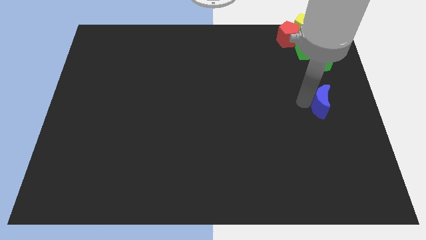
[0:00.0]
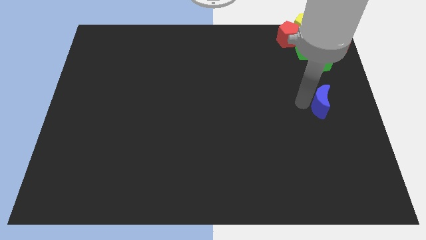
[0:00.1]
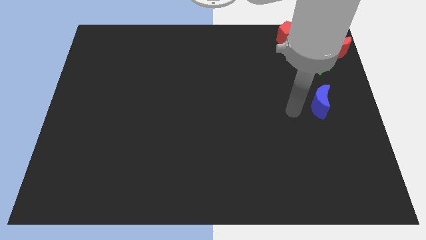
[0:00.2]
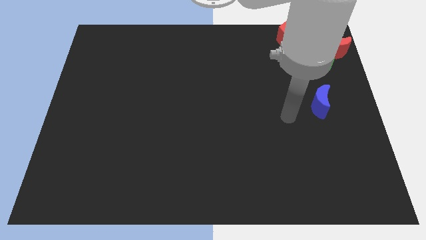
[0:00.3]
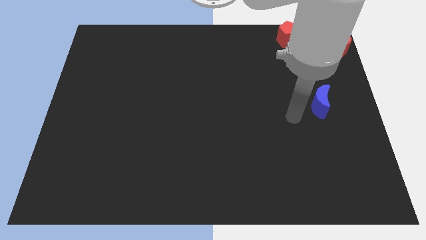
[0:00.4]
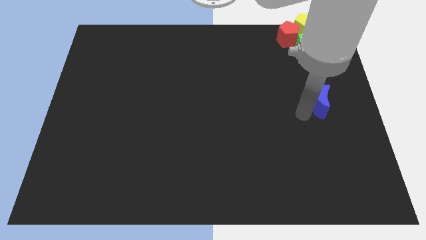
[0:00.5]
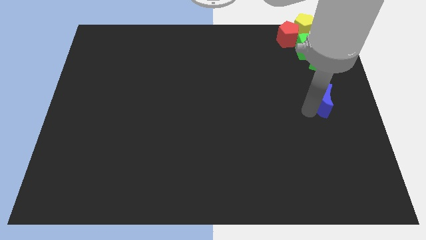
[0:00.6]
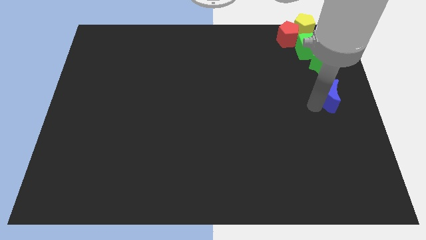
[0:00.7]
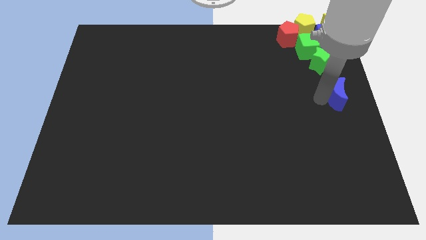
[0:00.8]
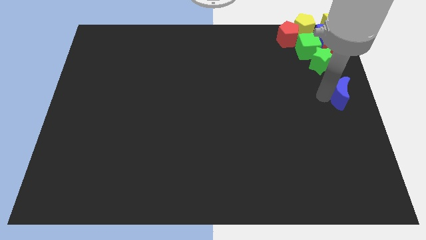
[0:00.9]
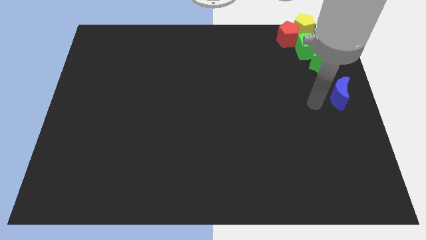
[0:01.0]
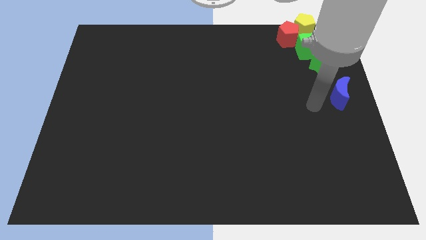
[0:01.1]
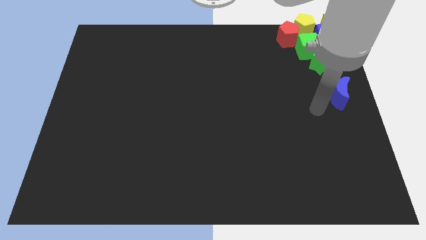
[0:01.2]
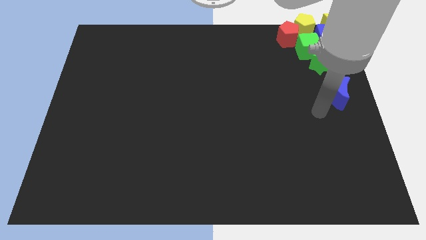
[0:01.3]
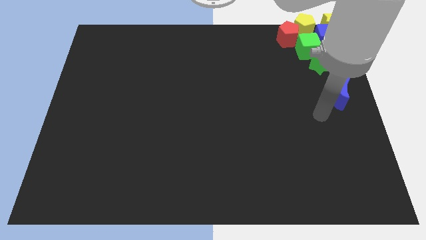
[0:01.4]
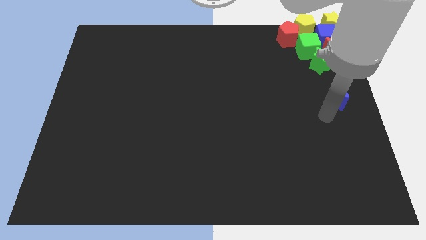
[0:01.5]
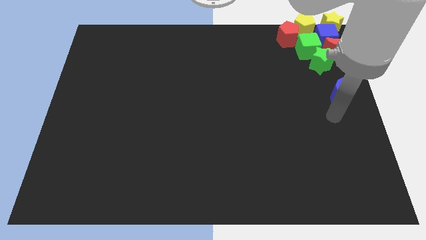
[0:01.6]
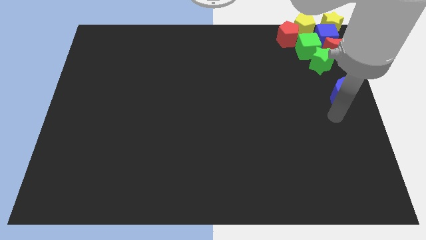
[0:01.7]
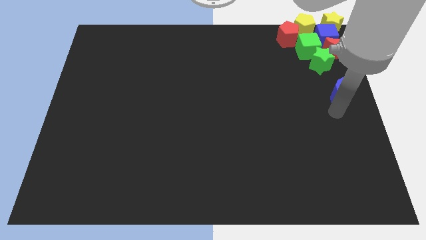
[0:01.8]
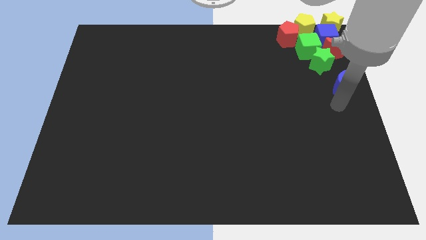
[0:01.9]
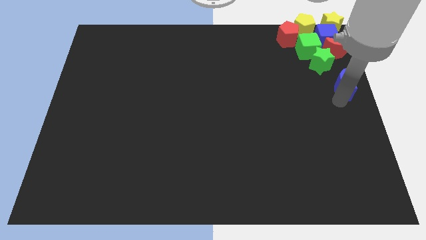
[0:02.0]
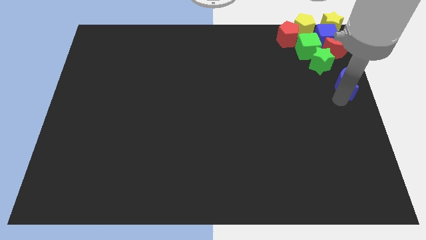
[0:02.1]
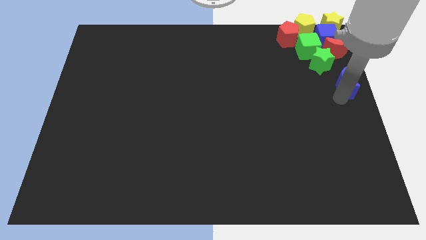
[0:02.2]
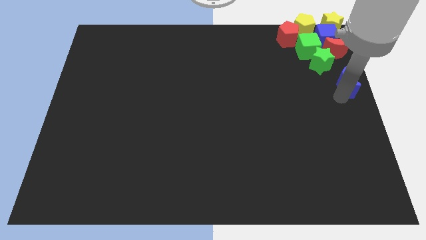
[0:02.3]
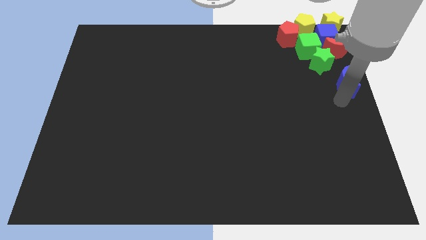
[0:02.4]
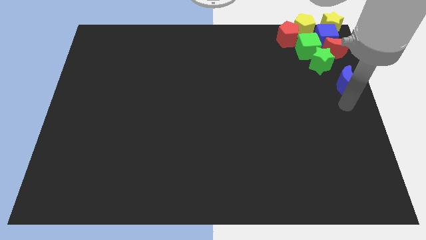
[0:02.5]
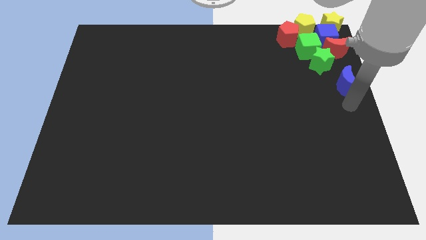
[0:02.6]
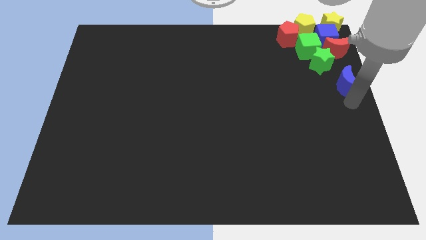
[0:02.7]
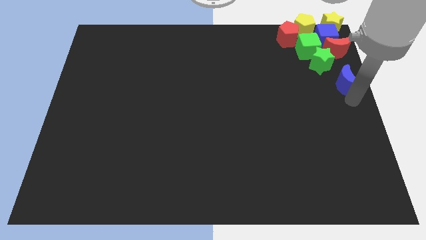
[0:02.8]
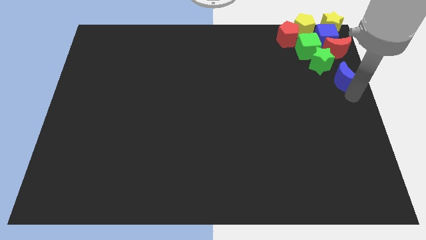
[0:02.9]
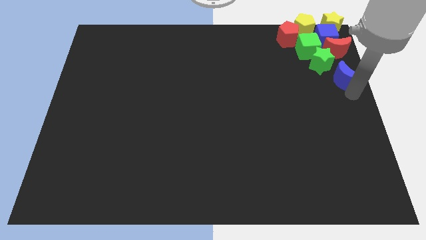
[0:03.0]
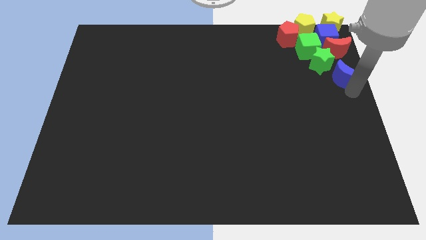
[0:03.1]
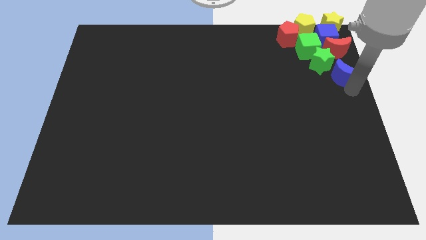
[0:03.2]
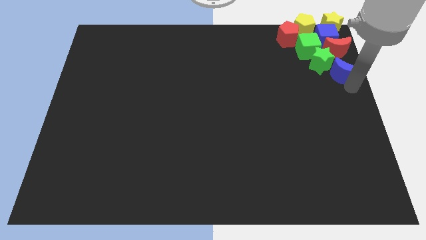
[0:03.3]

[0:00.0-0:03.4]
put the blue moon diagonally bottom right green star

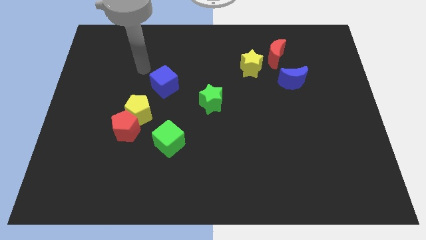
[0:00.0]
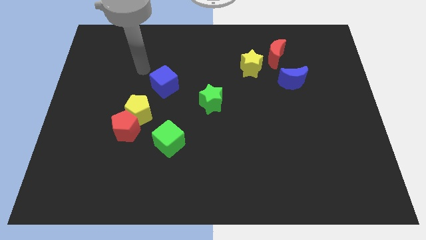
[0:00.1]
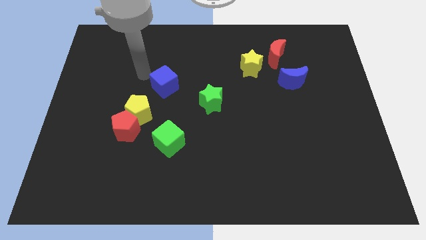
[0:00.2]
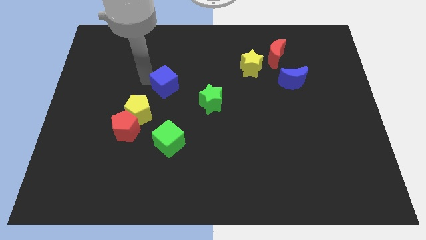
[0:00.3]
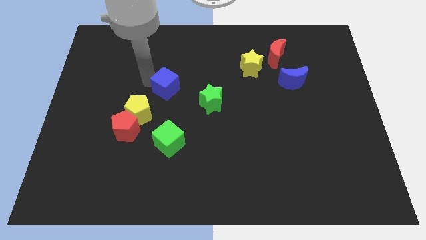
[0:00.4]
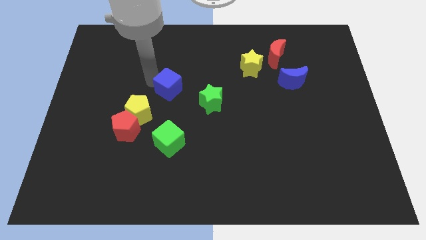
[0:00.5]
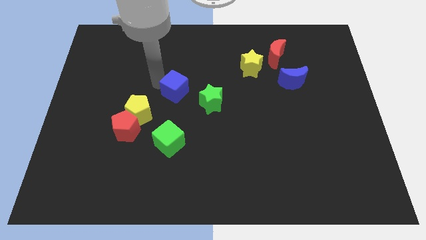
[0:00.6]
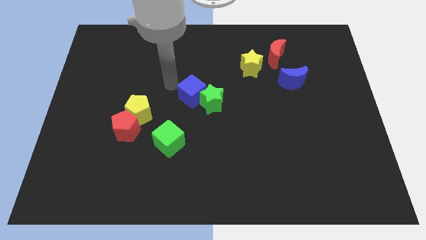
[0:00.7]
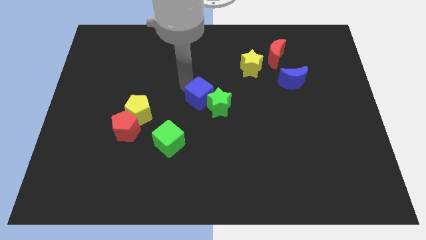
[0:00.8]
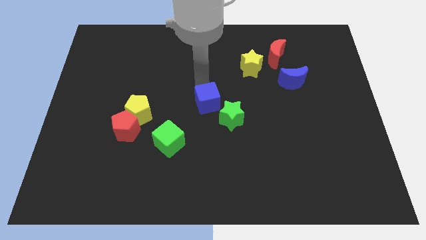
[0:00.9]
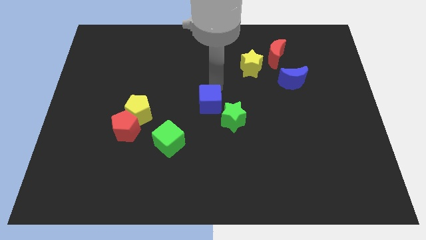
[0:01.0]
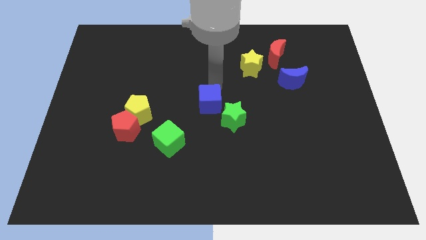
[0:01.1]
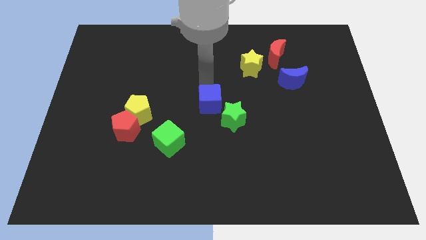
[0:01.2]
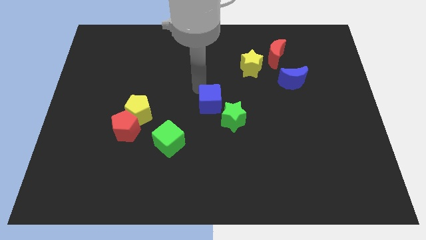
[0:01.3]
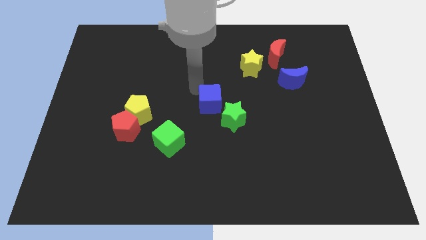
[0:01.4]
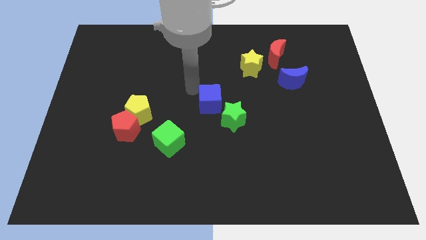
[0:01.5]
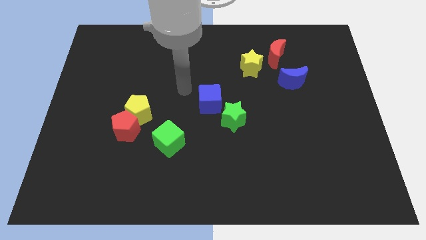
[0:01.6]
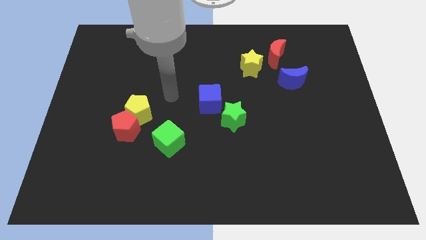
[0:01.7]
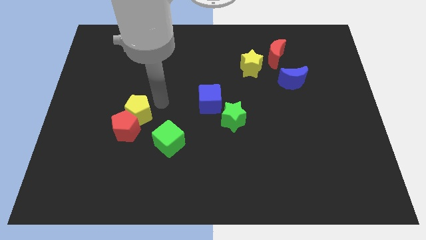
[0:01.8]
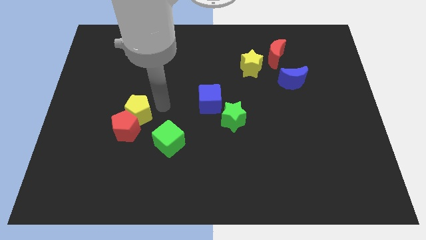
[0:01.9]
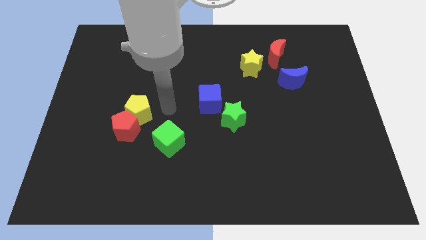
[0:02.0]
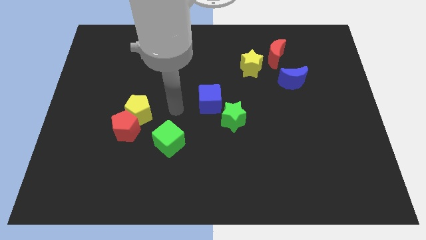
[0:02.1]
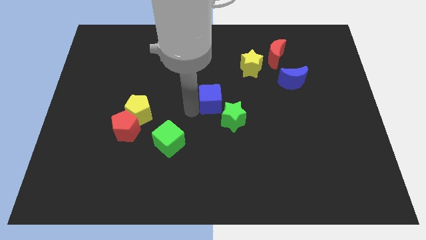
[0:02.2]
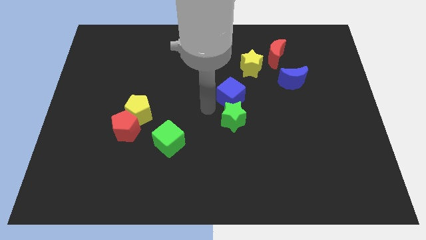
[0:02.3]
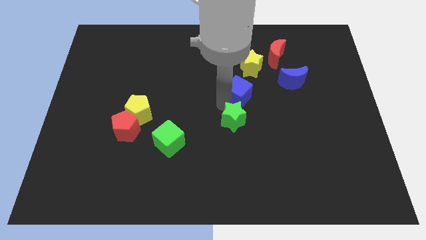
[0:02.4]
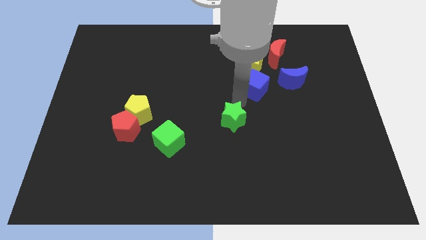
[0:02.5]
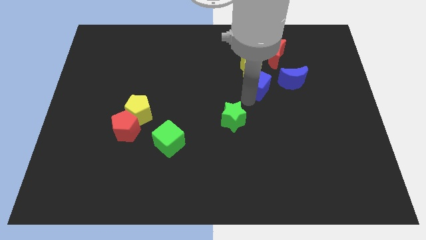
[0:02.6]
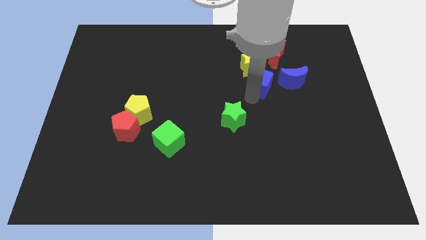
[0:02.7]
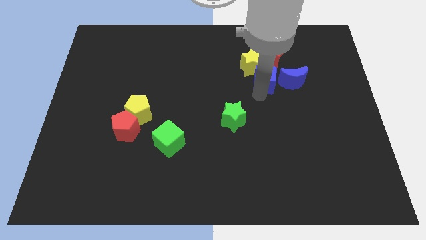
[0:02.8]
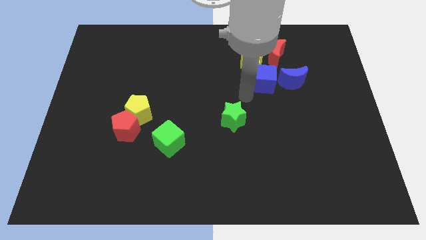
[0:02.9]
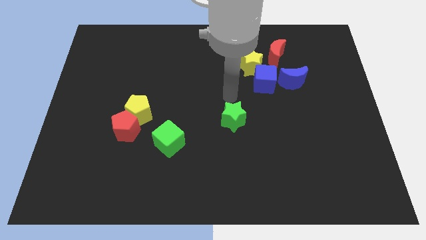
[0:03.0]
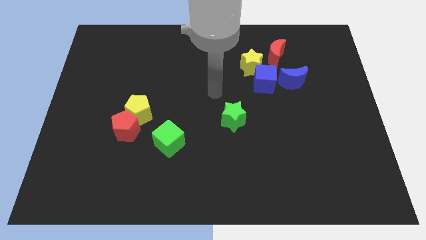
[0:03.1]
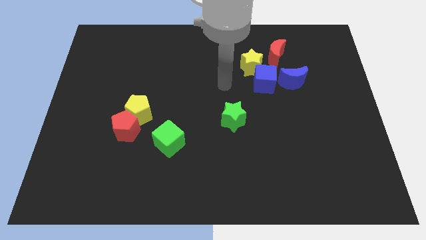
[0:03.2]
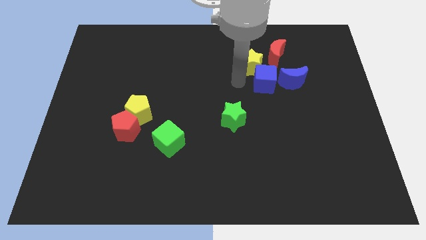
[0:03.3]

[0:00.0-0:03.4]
push the blue cube to the left side of the blue moon

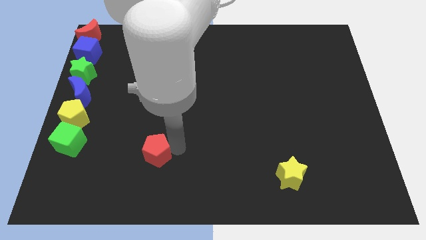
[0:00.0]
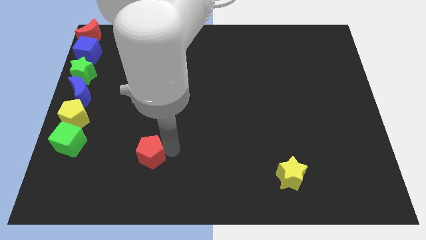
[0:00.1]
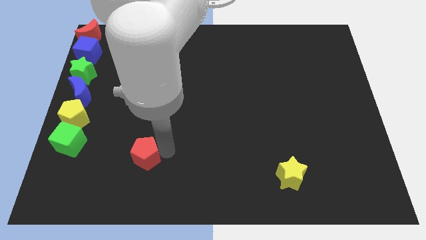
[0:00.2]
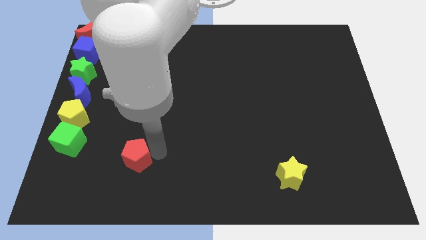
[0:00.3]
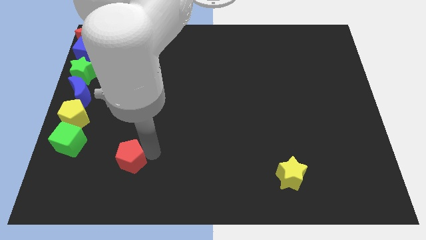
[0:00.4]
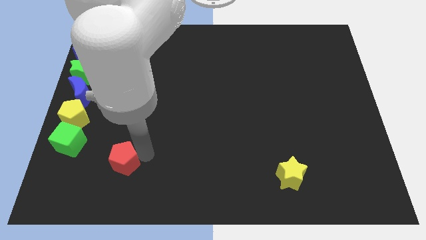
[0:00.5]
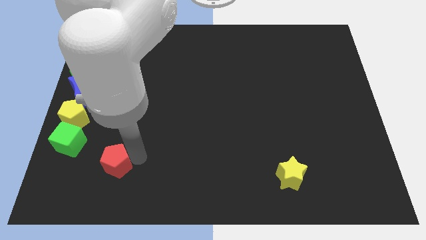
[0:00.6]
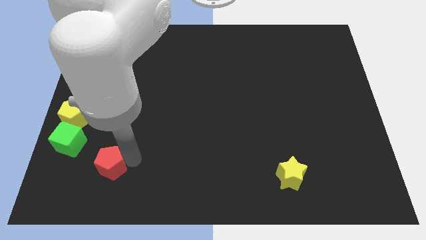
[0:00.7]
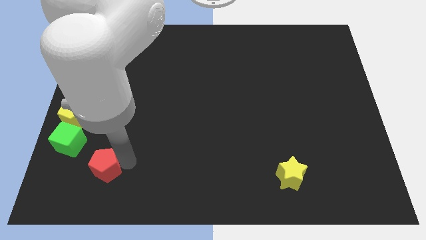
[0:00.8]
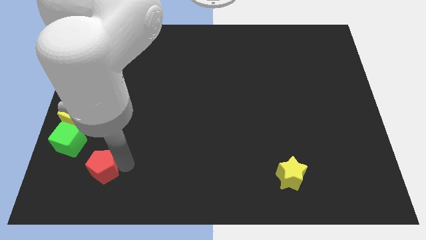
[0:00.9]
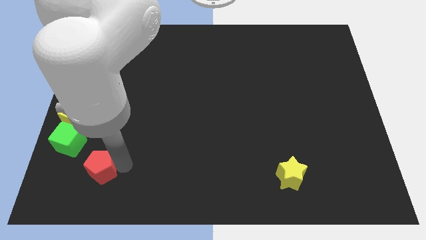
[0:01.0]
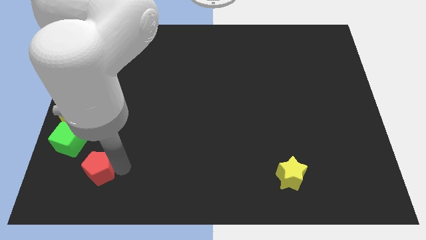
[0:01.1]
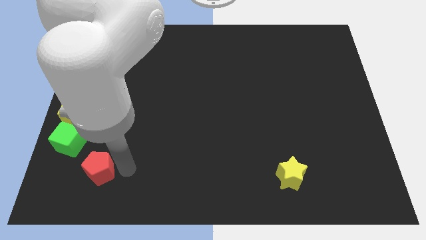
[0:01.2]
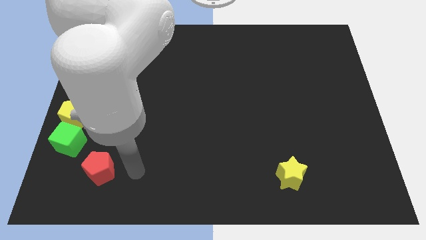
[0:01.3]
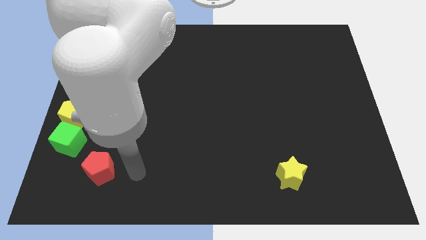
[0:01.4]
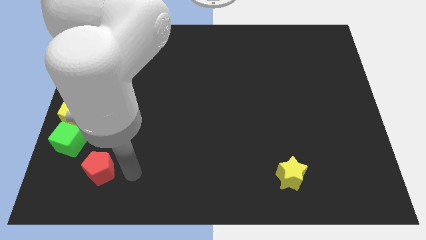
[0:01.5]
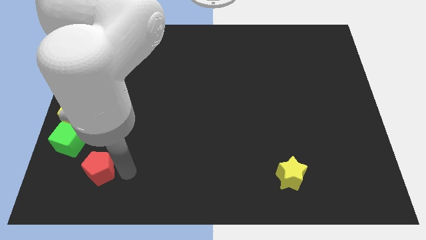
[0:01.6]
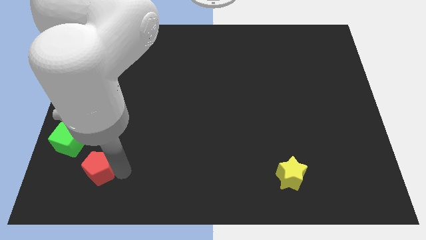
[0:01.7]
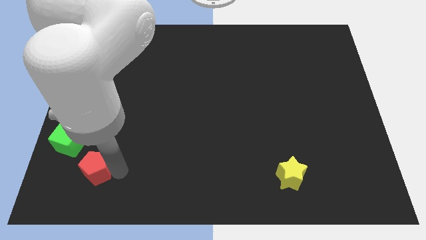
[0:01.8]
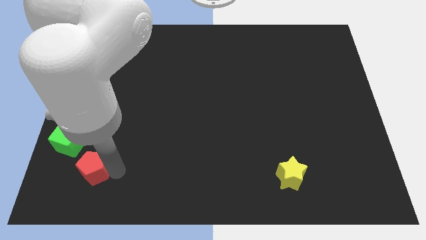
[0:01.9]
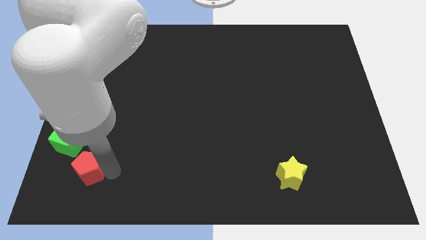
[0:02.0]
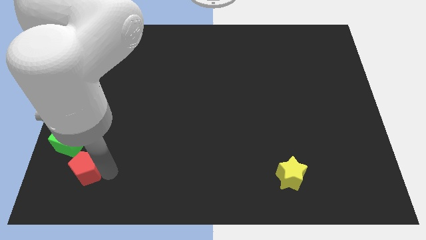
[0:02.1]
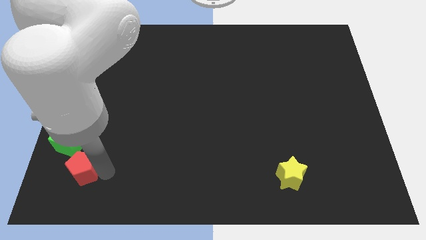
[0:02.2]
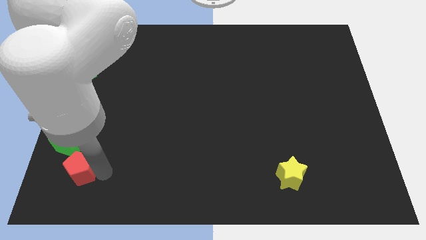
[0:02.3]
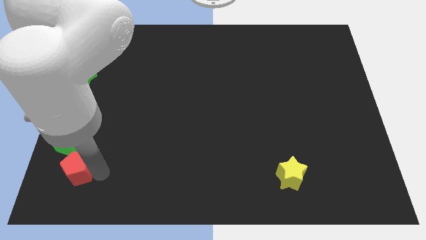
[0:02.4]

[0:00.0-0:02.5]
push red pentagon towards the green cube
